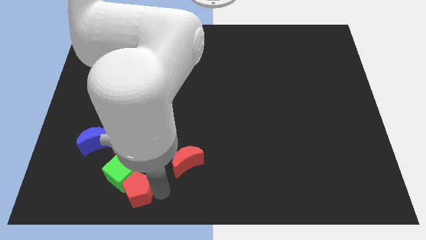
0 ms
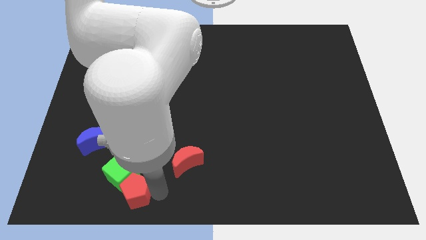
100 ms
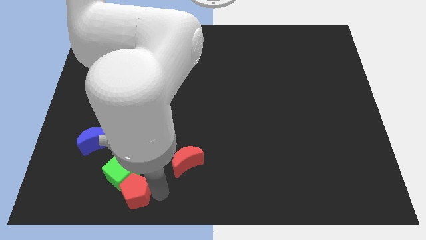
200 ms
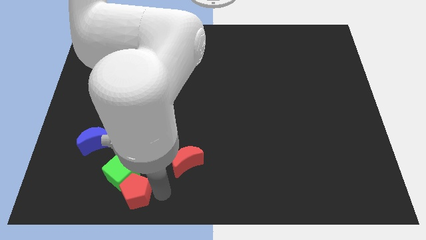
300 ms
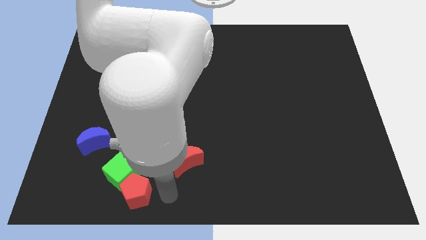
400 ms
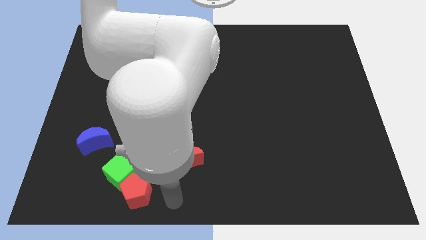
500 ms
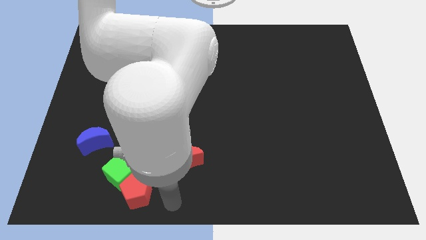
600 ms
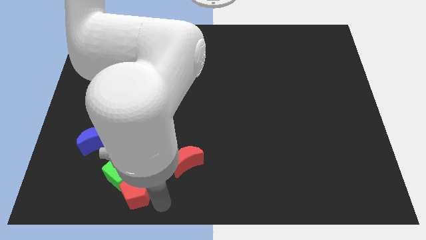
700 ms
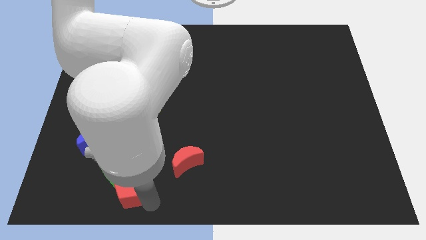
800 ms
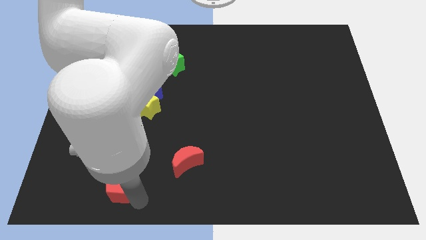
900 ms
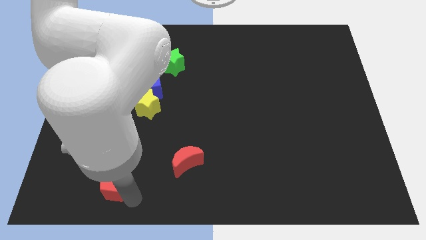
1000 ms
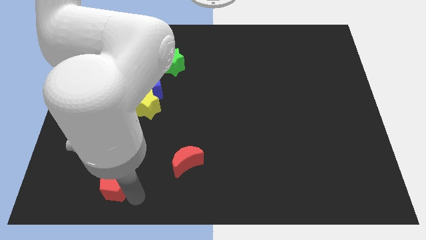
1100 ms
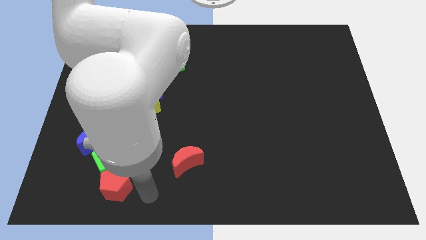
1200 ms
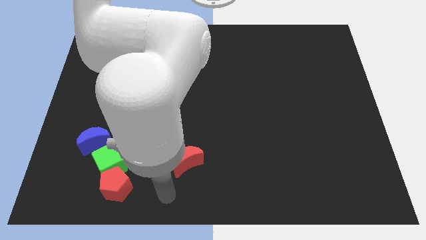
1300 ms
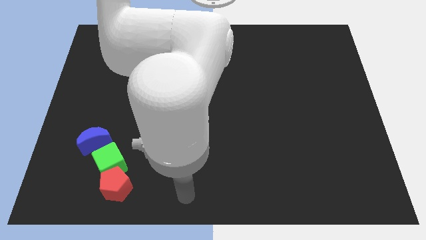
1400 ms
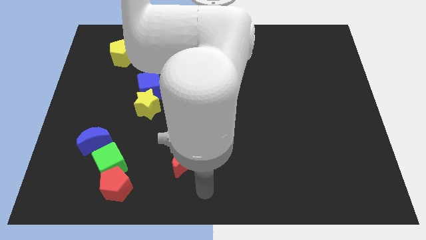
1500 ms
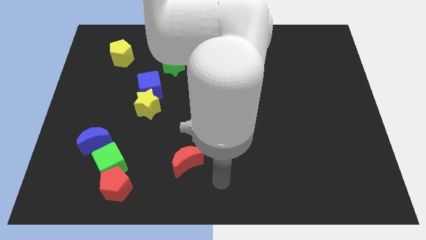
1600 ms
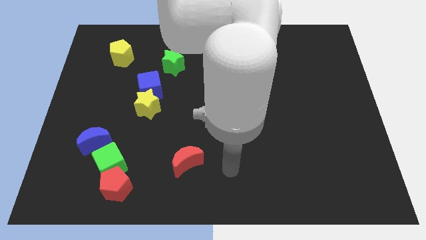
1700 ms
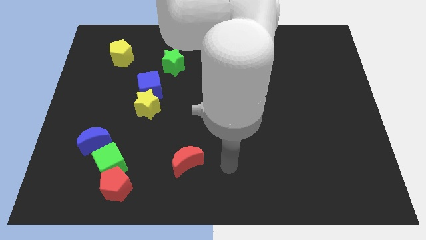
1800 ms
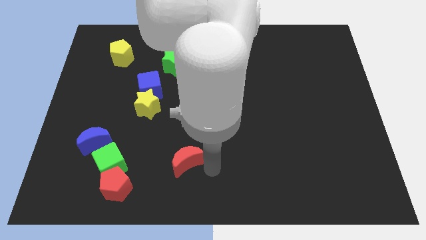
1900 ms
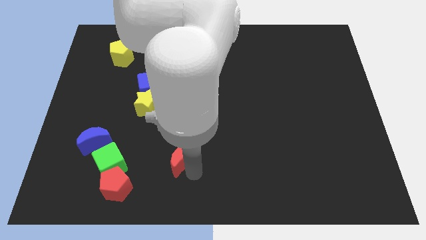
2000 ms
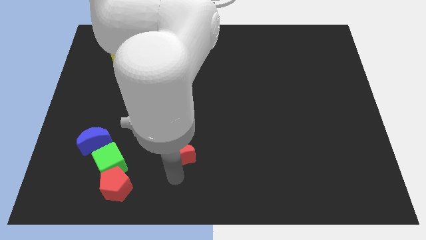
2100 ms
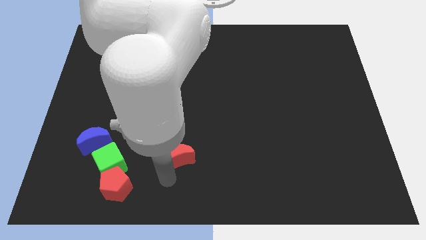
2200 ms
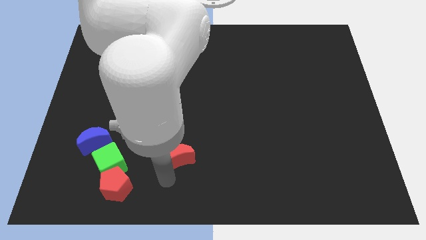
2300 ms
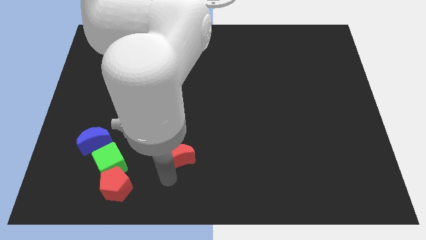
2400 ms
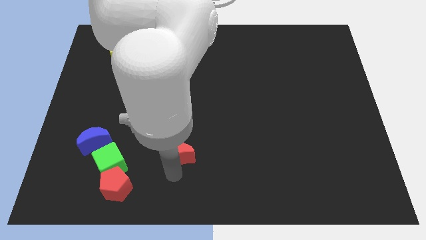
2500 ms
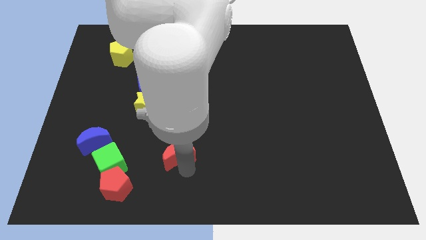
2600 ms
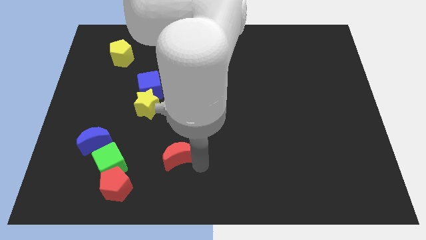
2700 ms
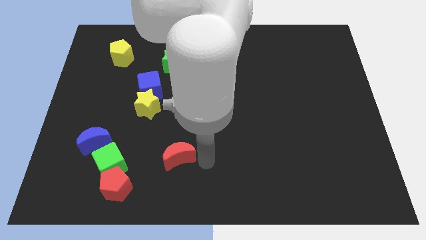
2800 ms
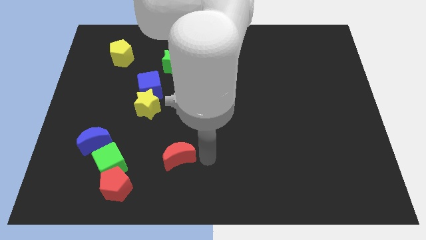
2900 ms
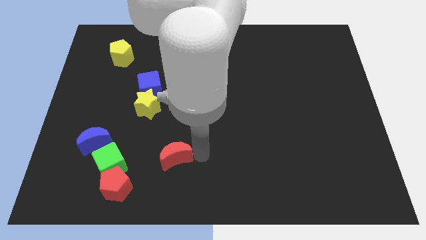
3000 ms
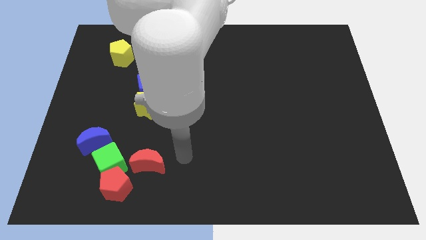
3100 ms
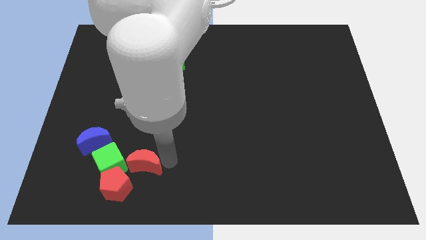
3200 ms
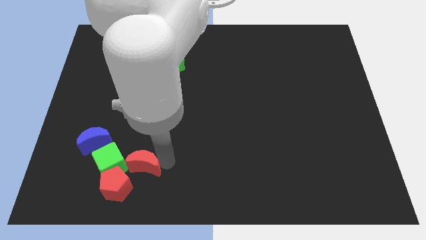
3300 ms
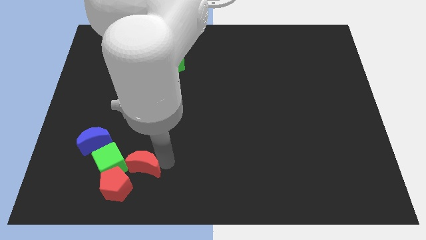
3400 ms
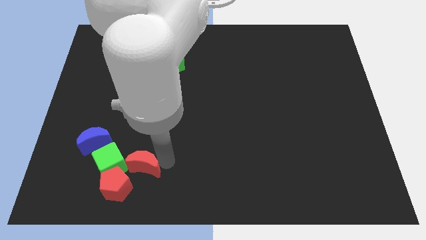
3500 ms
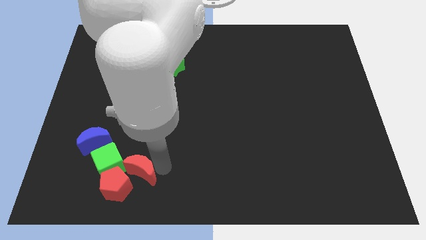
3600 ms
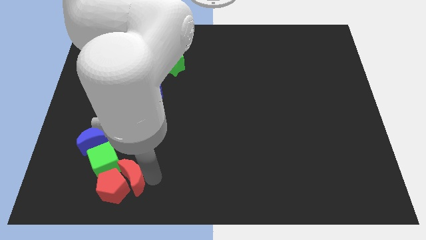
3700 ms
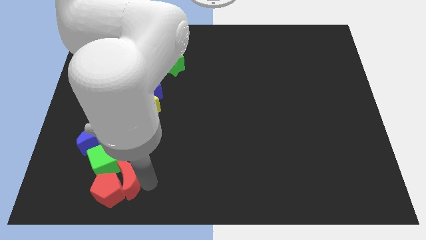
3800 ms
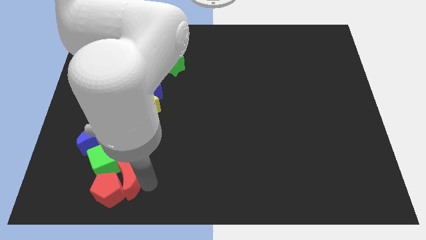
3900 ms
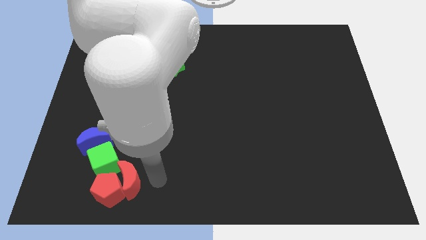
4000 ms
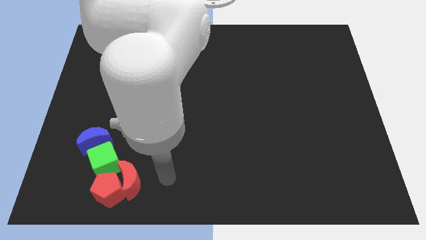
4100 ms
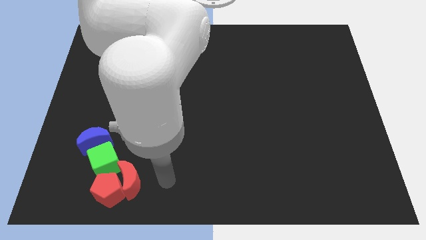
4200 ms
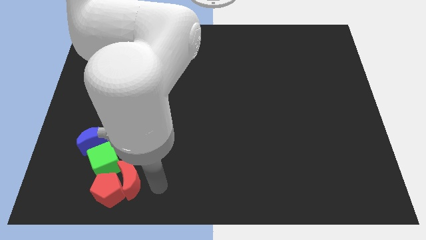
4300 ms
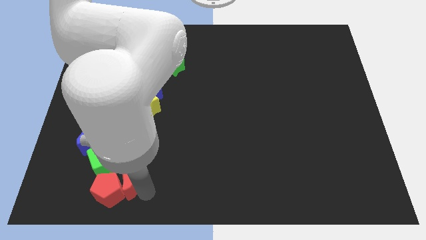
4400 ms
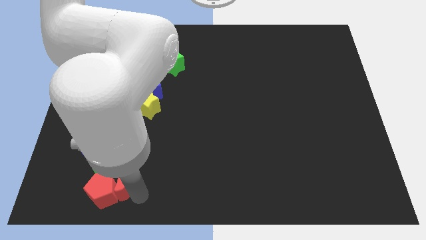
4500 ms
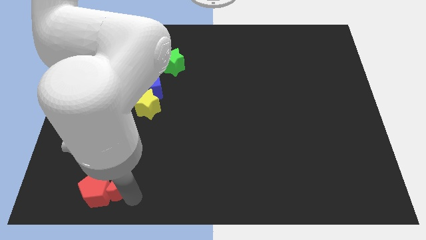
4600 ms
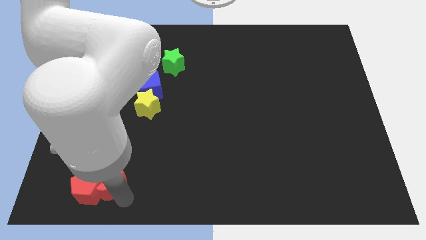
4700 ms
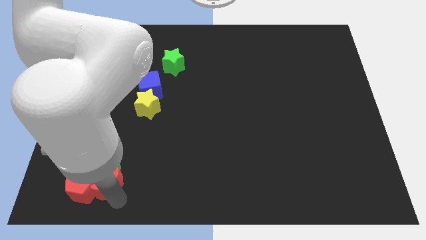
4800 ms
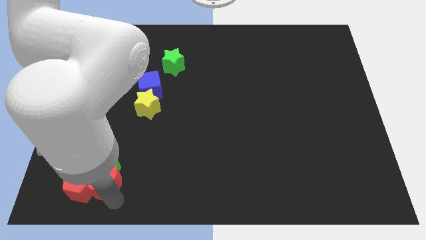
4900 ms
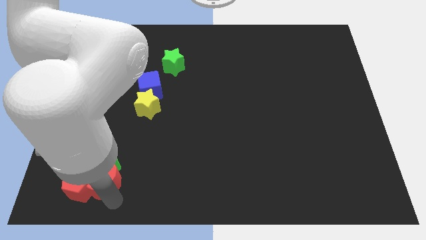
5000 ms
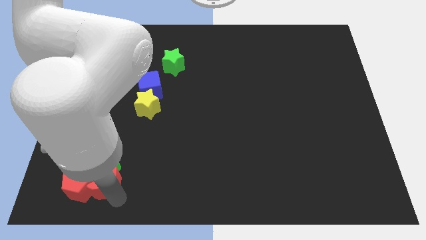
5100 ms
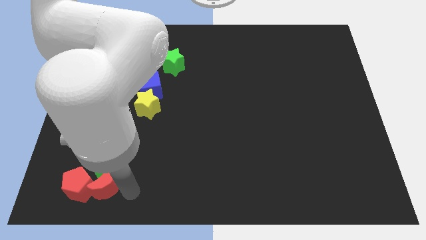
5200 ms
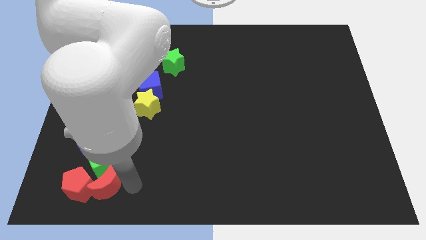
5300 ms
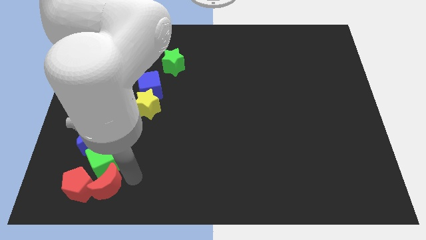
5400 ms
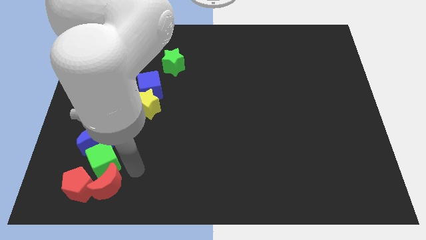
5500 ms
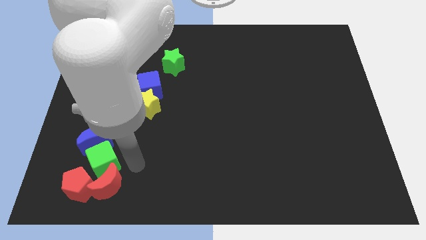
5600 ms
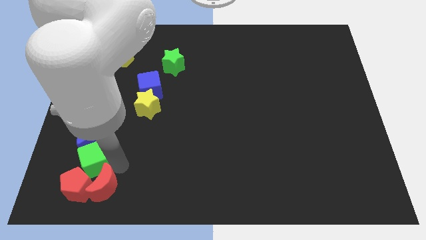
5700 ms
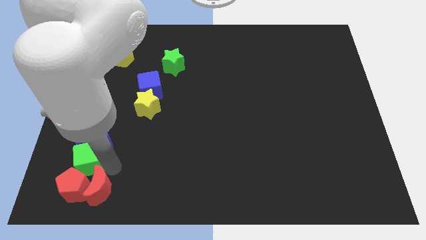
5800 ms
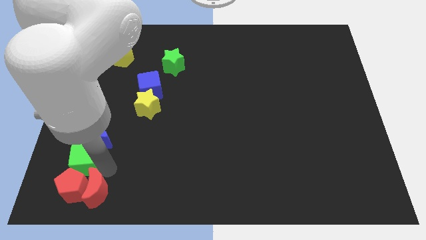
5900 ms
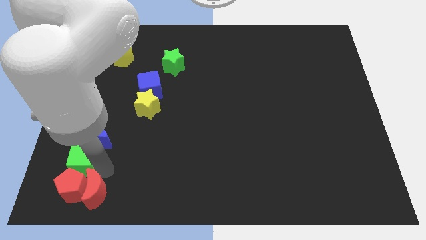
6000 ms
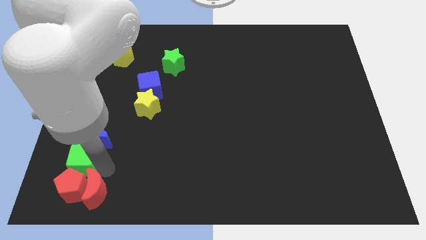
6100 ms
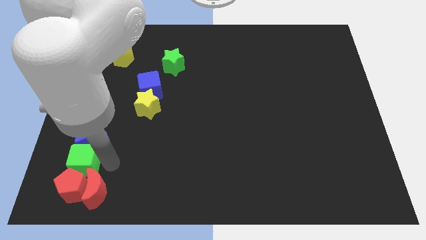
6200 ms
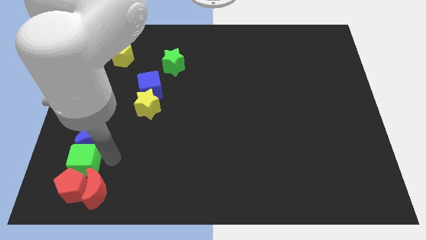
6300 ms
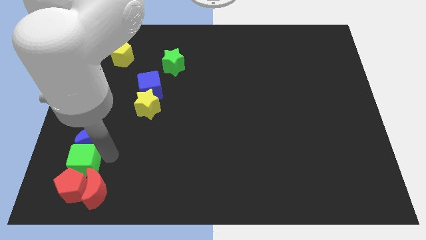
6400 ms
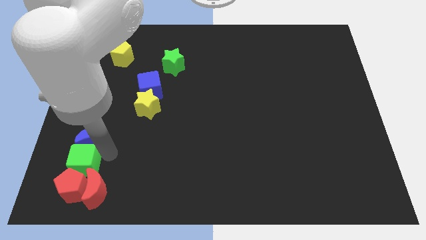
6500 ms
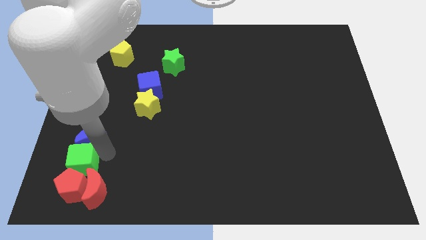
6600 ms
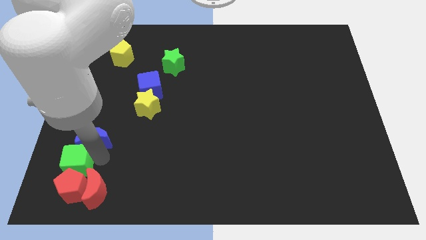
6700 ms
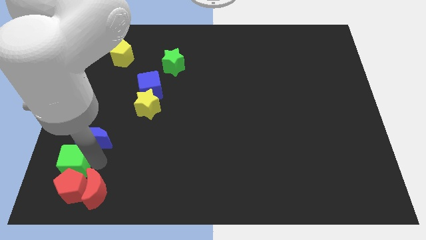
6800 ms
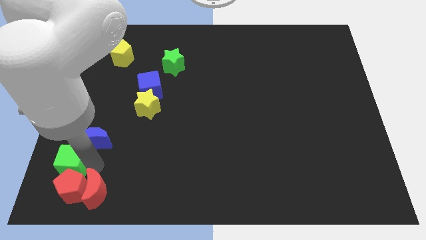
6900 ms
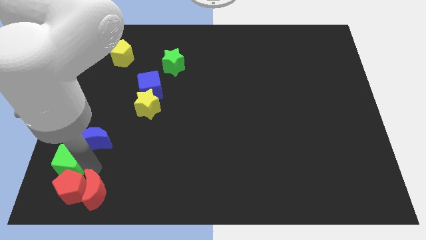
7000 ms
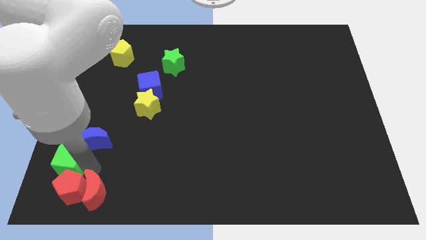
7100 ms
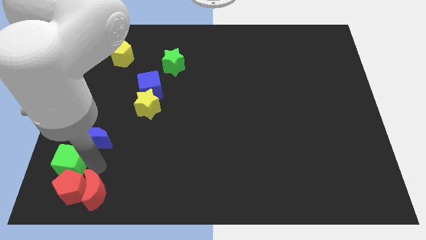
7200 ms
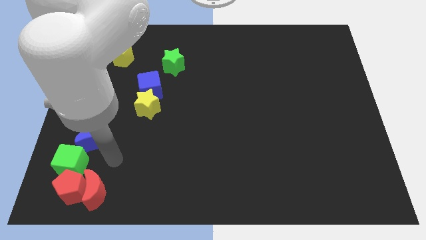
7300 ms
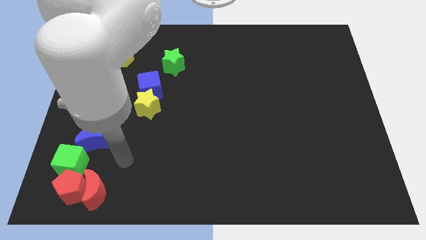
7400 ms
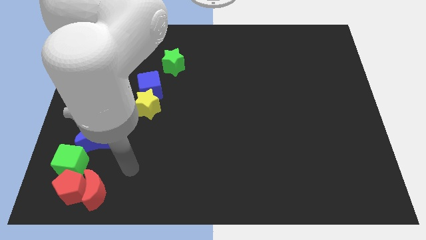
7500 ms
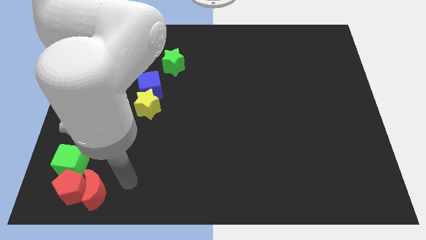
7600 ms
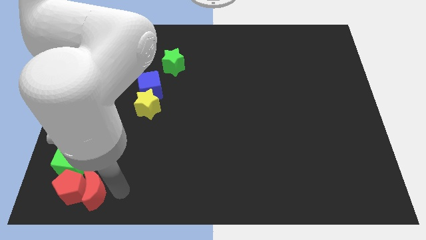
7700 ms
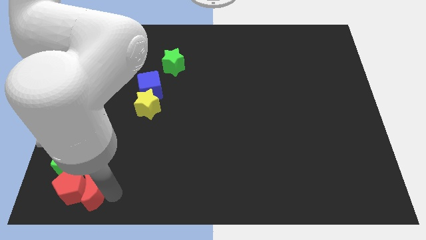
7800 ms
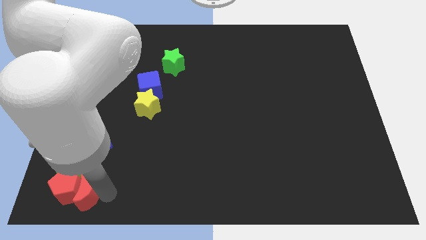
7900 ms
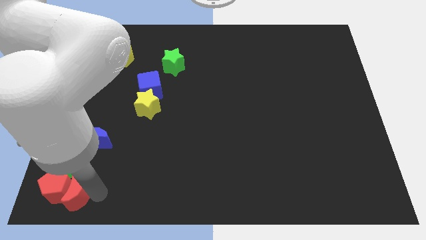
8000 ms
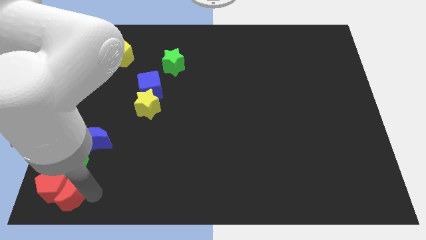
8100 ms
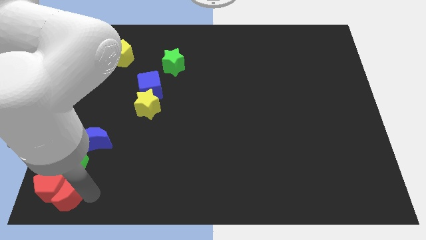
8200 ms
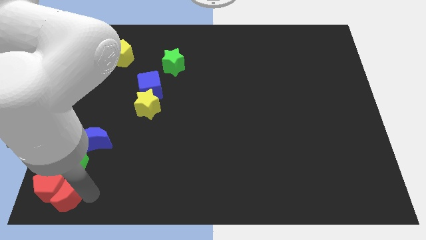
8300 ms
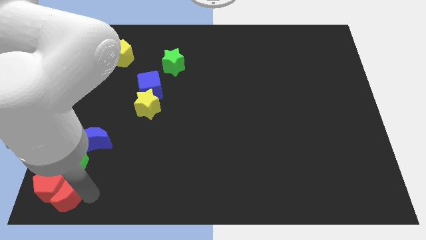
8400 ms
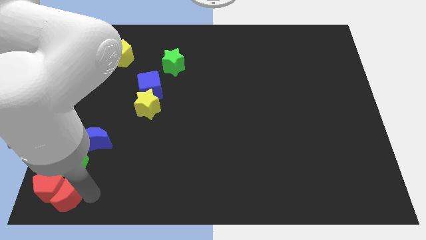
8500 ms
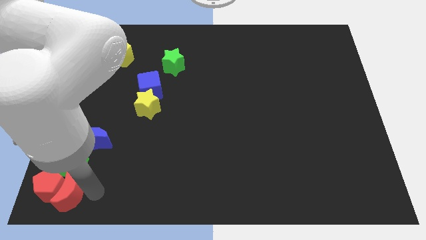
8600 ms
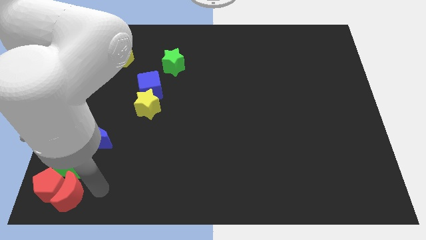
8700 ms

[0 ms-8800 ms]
push the red crescent into the both red pentagon and green cube

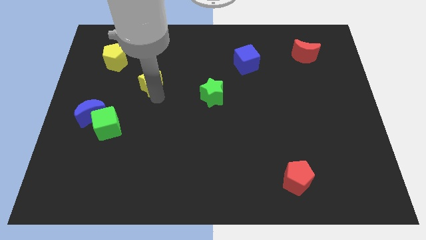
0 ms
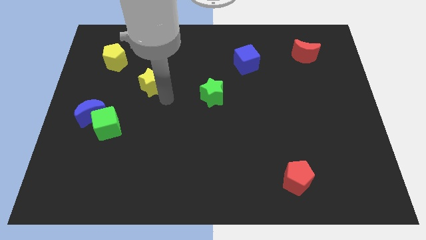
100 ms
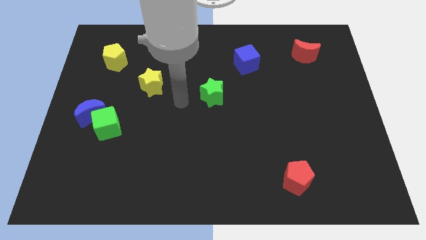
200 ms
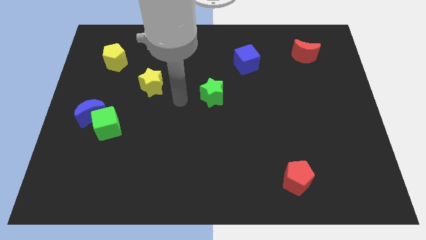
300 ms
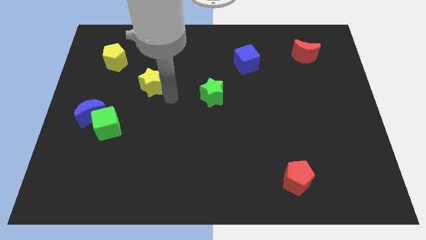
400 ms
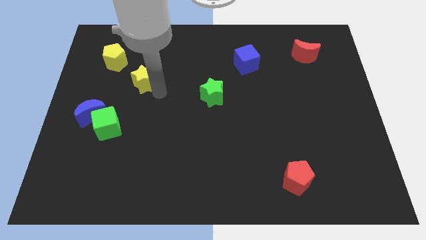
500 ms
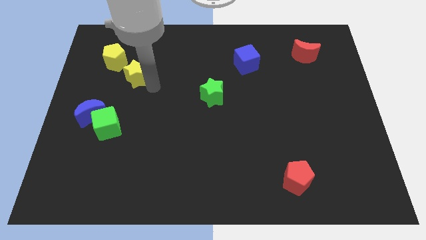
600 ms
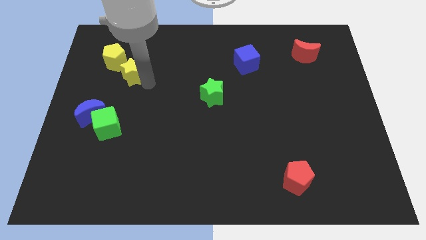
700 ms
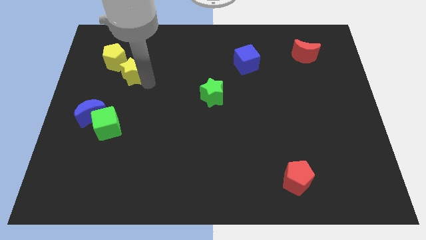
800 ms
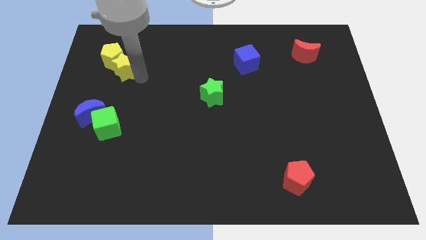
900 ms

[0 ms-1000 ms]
move yellow star into the yellow pentagon
